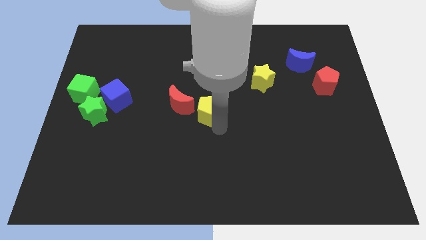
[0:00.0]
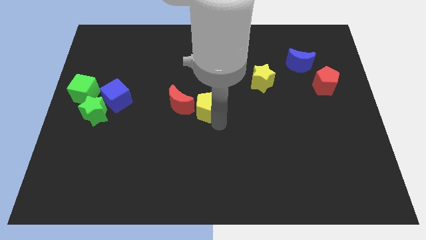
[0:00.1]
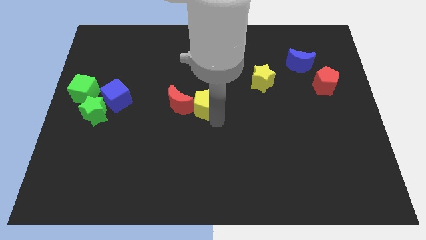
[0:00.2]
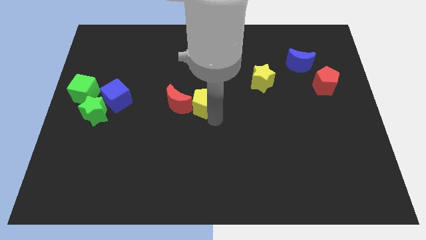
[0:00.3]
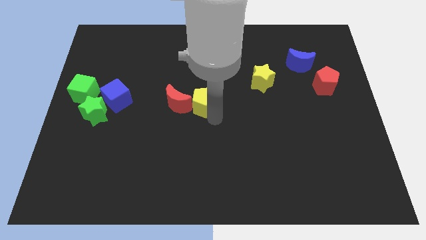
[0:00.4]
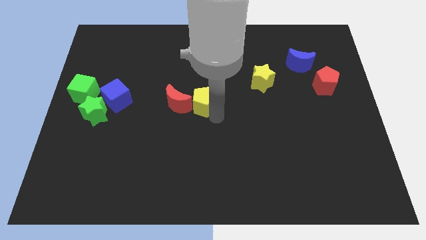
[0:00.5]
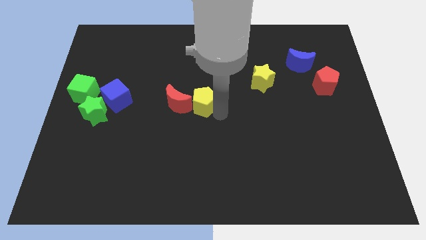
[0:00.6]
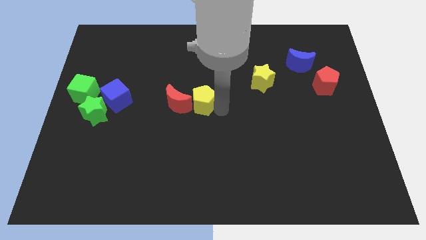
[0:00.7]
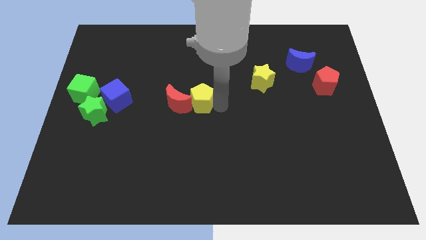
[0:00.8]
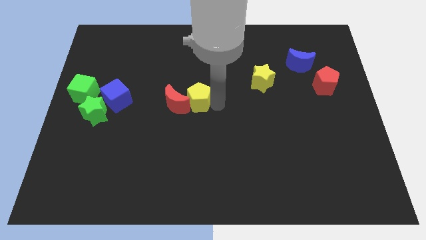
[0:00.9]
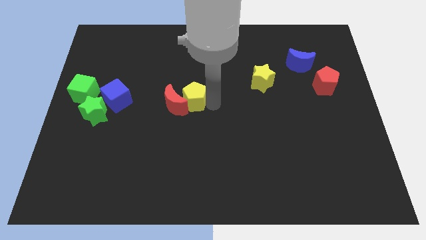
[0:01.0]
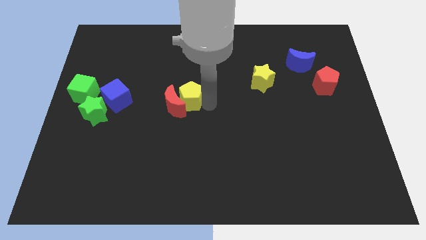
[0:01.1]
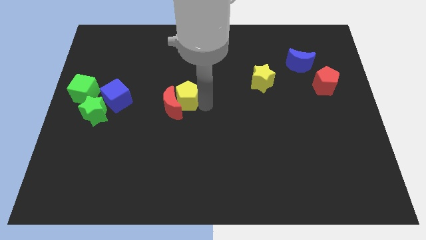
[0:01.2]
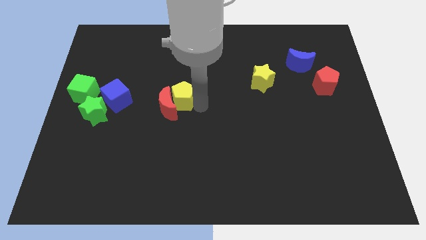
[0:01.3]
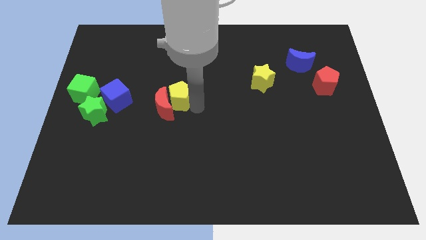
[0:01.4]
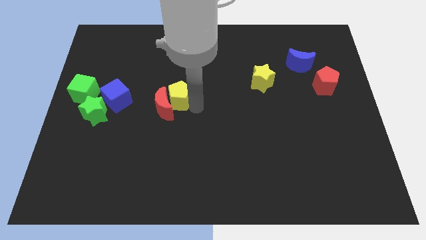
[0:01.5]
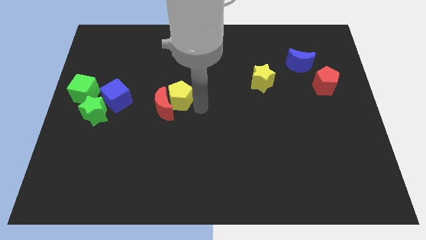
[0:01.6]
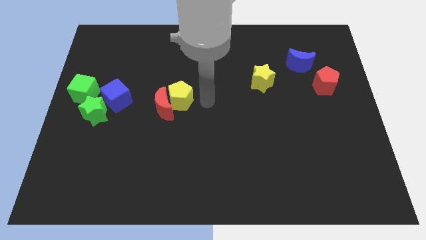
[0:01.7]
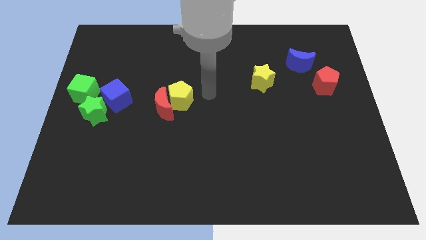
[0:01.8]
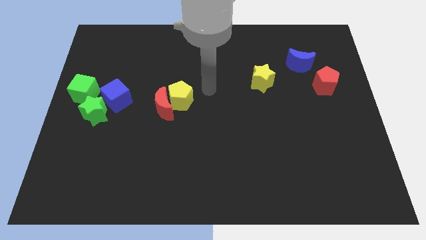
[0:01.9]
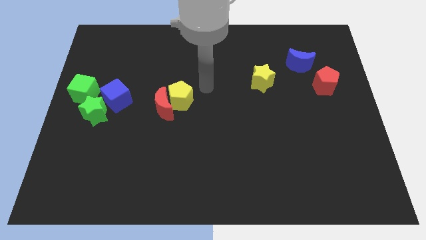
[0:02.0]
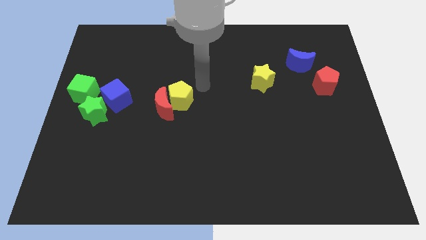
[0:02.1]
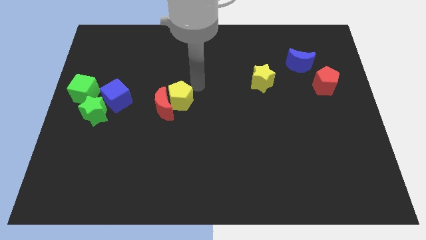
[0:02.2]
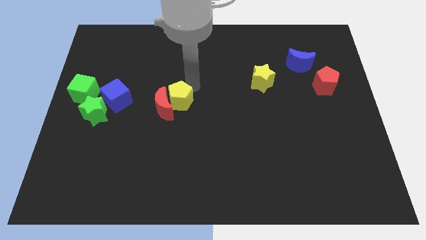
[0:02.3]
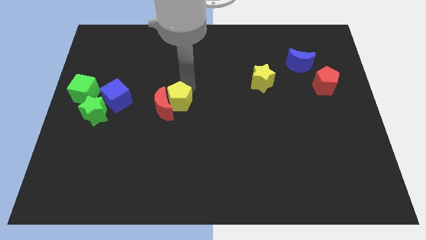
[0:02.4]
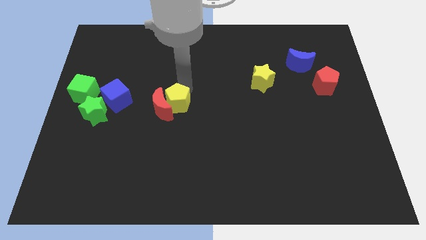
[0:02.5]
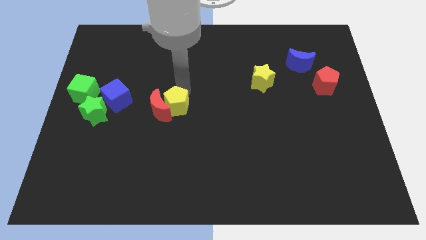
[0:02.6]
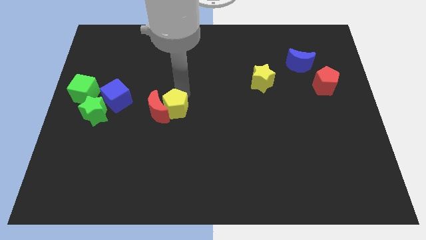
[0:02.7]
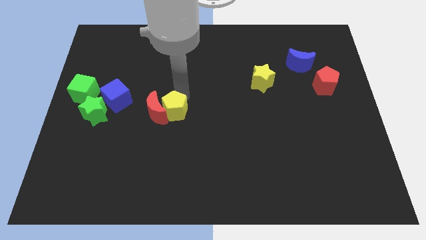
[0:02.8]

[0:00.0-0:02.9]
push the red crescent with yellow pentagon towards the center left of the board

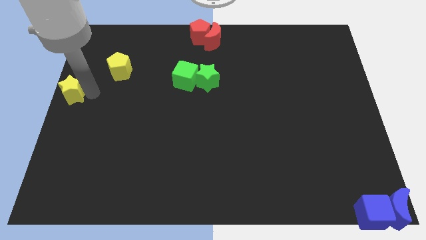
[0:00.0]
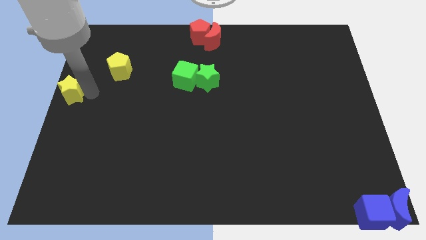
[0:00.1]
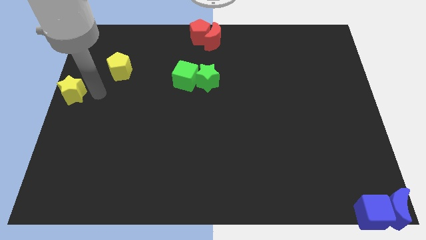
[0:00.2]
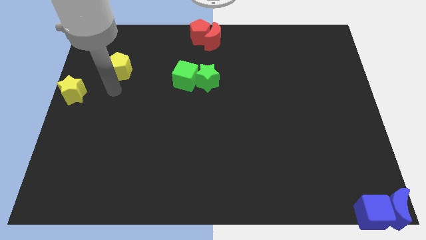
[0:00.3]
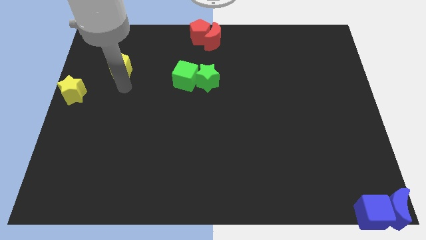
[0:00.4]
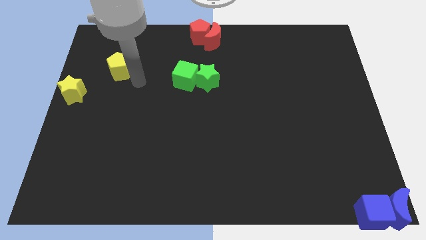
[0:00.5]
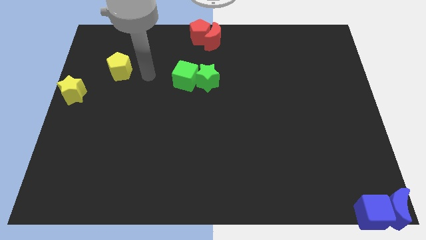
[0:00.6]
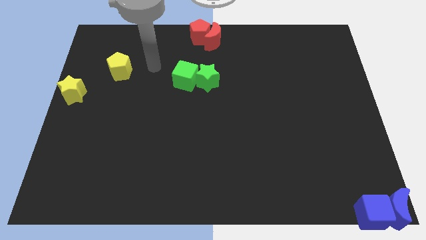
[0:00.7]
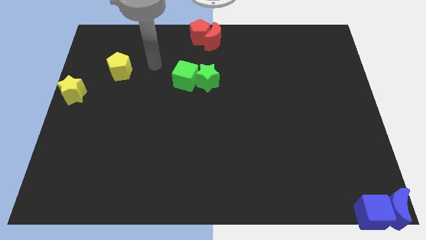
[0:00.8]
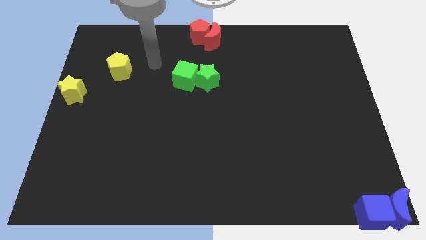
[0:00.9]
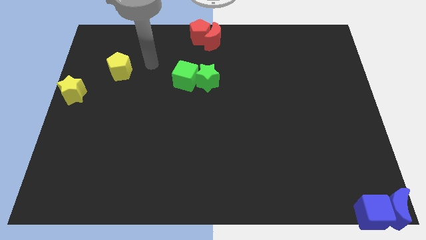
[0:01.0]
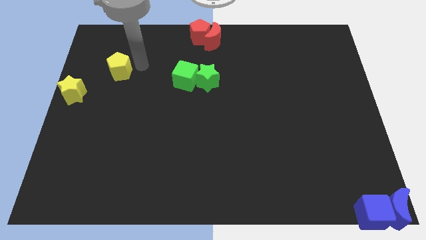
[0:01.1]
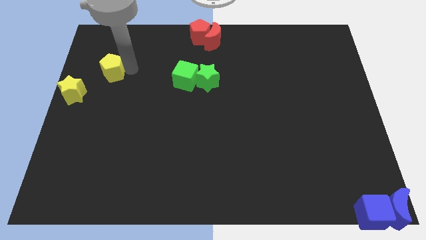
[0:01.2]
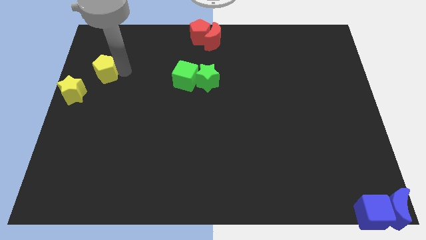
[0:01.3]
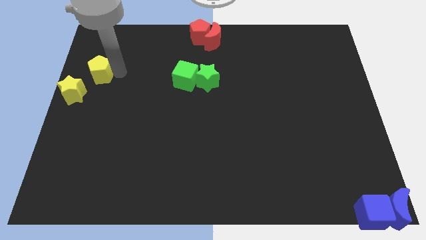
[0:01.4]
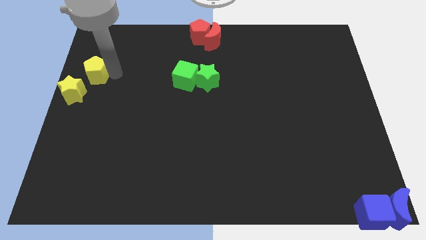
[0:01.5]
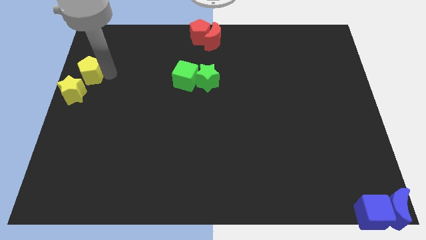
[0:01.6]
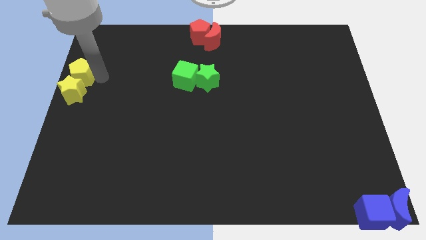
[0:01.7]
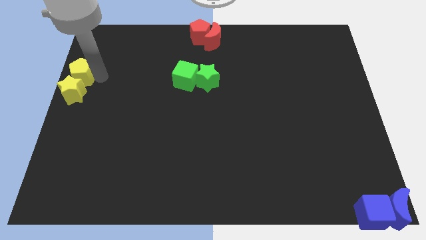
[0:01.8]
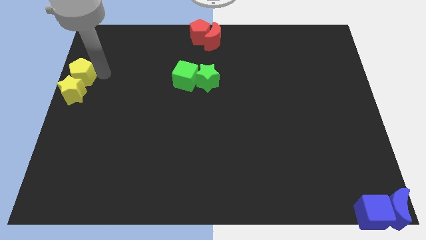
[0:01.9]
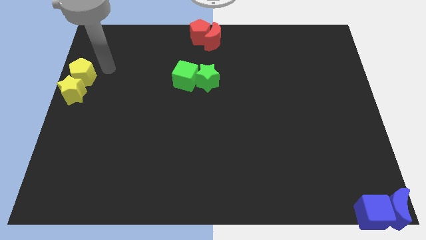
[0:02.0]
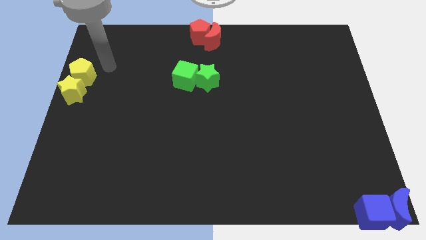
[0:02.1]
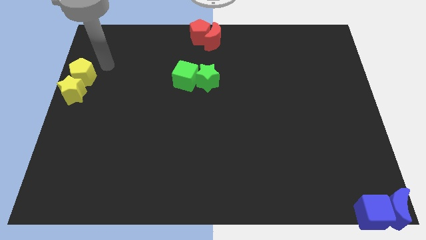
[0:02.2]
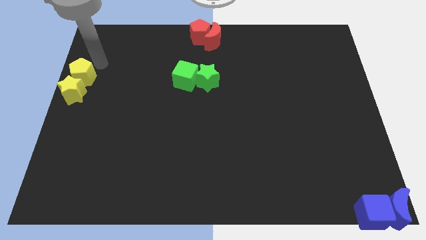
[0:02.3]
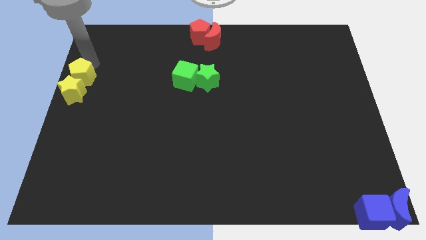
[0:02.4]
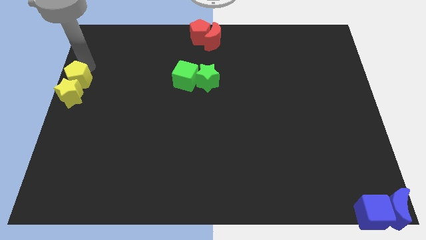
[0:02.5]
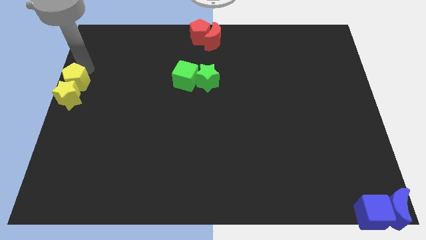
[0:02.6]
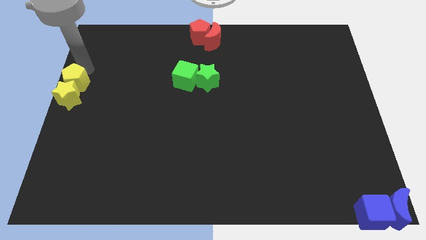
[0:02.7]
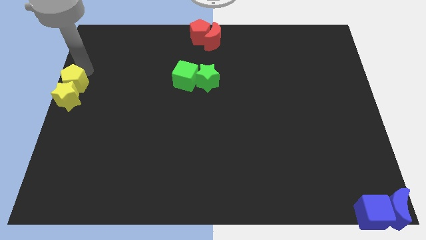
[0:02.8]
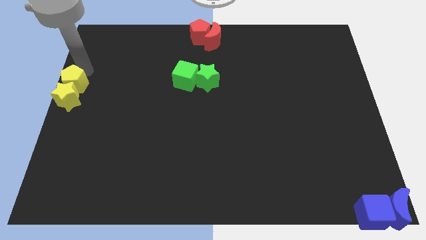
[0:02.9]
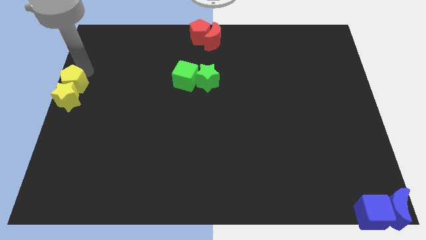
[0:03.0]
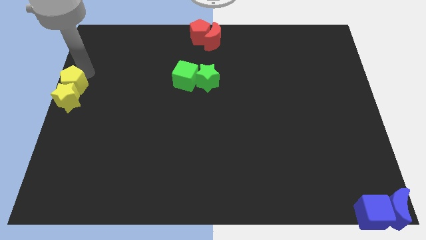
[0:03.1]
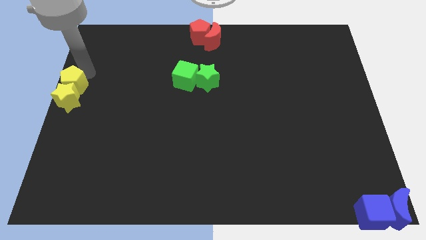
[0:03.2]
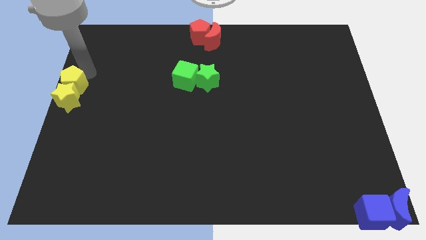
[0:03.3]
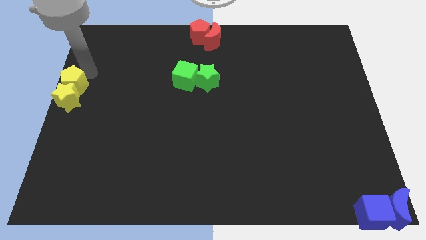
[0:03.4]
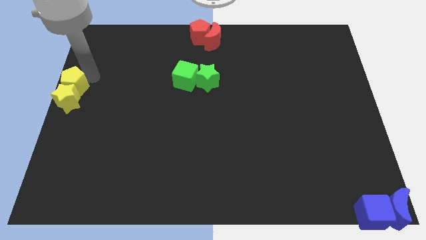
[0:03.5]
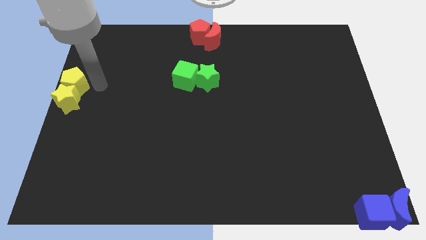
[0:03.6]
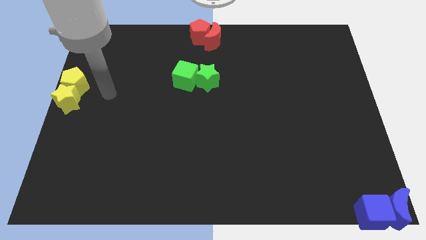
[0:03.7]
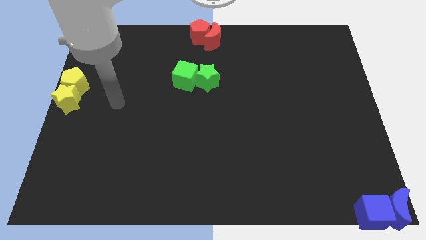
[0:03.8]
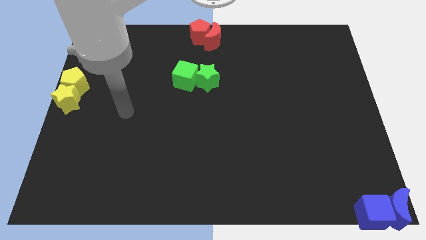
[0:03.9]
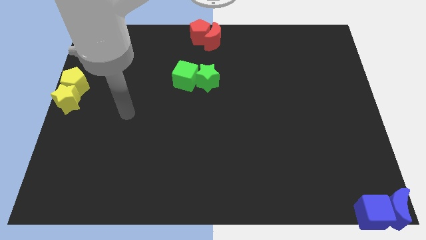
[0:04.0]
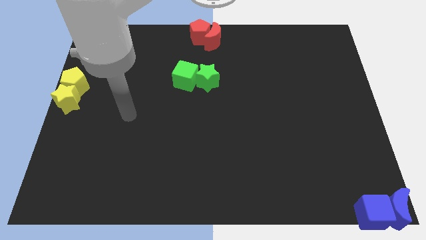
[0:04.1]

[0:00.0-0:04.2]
place yellow blocks to the left center corner of the board

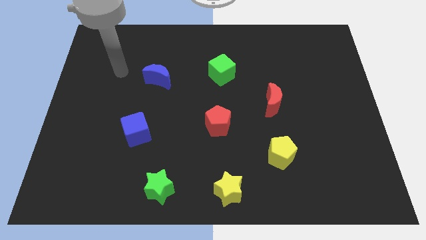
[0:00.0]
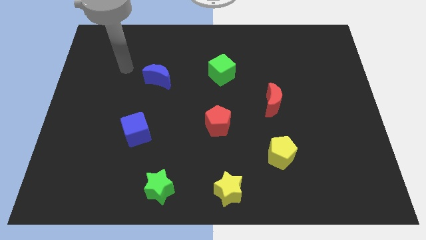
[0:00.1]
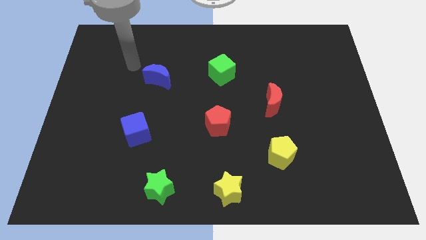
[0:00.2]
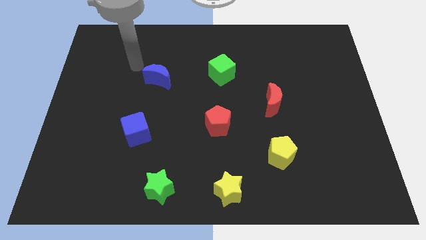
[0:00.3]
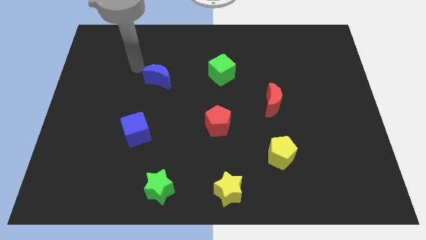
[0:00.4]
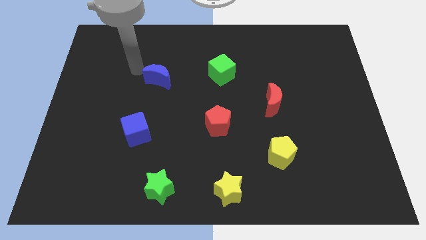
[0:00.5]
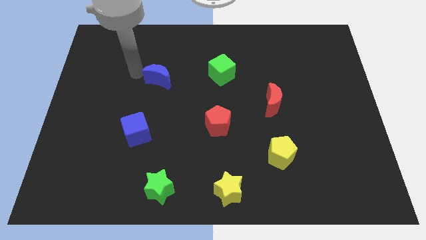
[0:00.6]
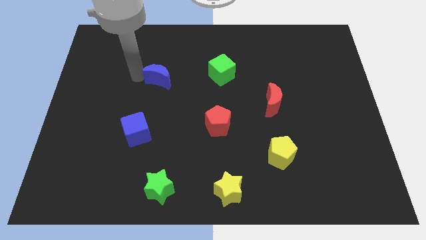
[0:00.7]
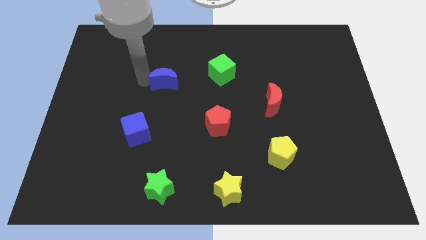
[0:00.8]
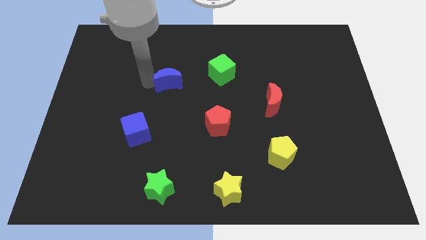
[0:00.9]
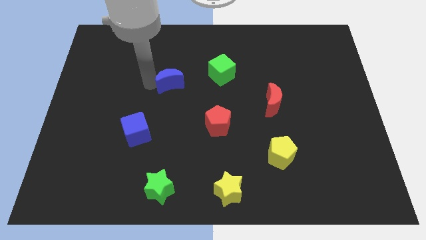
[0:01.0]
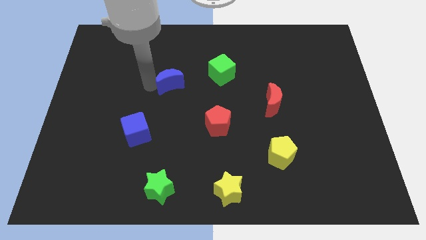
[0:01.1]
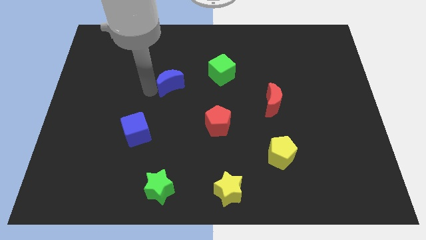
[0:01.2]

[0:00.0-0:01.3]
push the blue moon slightly to the right side

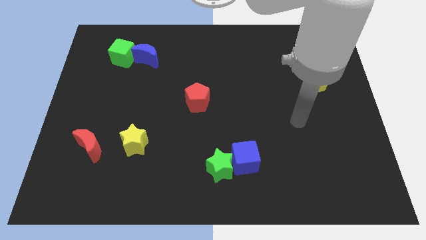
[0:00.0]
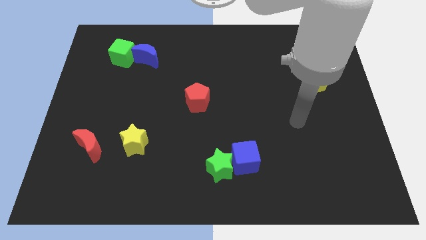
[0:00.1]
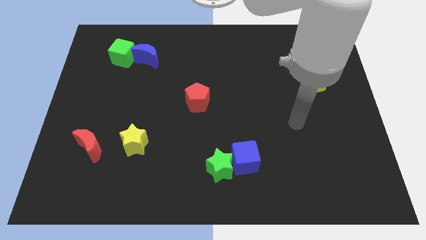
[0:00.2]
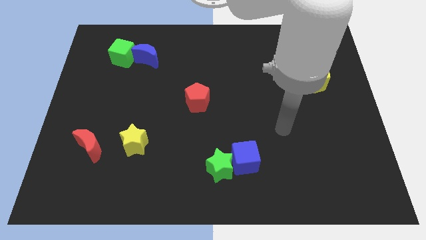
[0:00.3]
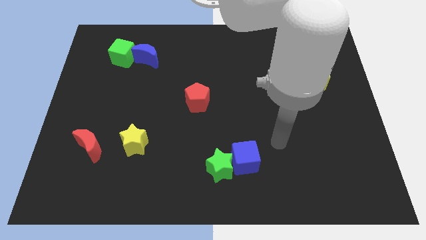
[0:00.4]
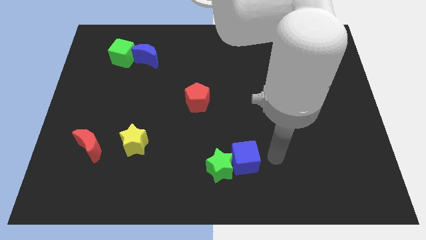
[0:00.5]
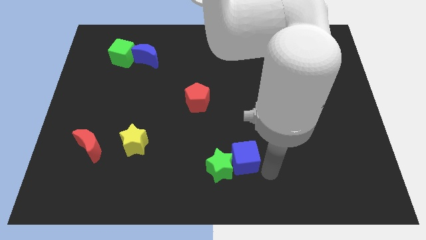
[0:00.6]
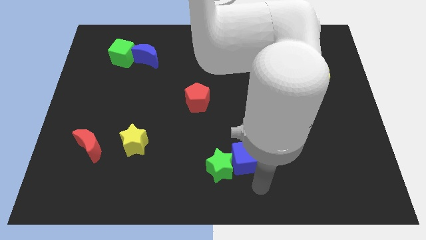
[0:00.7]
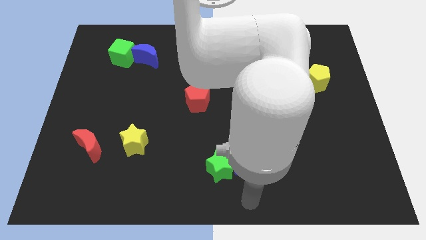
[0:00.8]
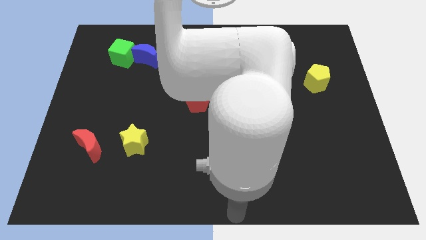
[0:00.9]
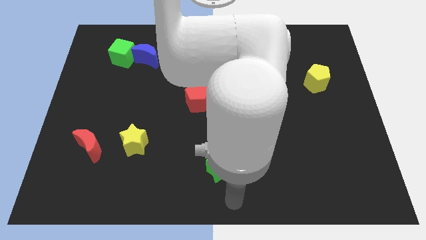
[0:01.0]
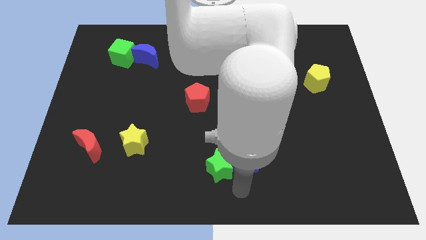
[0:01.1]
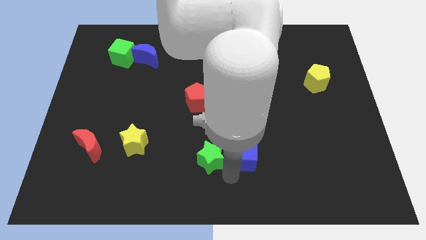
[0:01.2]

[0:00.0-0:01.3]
place the arm below the blue cube
